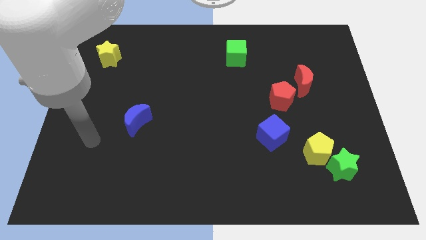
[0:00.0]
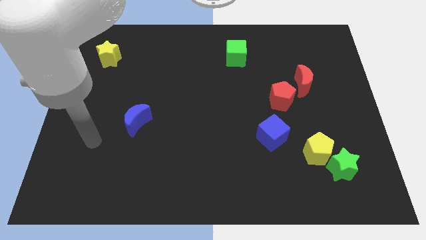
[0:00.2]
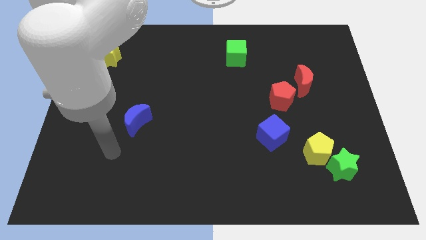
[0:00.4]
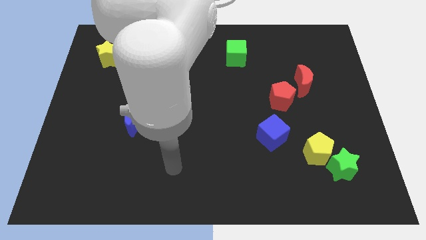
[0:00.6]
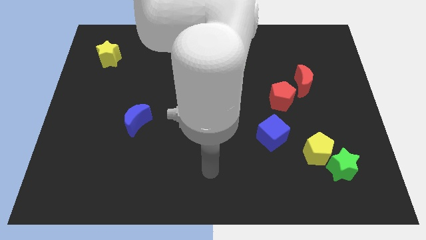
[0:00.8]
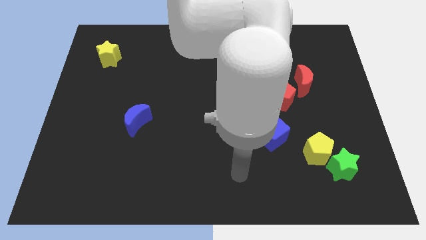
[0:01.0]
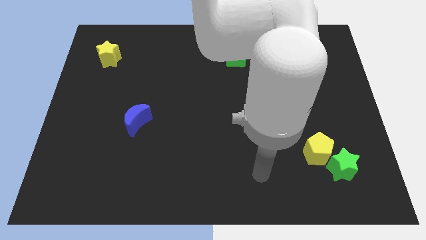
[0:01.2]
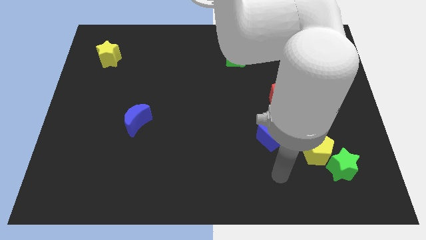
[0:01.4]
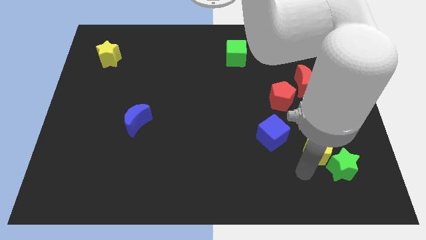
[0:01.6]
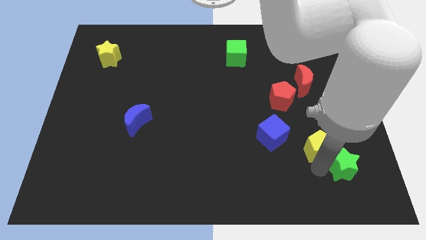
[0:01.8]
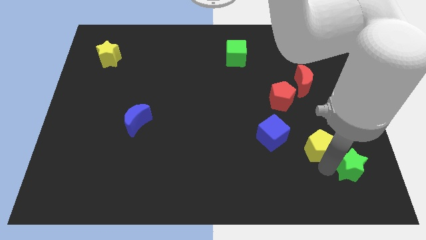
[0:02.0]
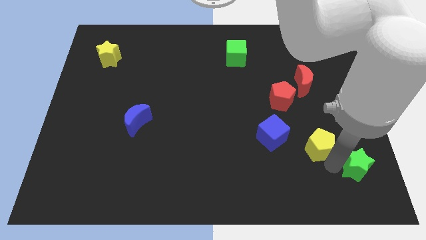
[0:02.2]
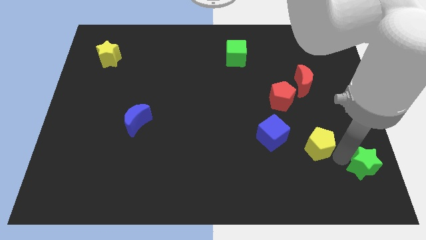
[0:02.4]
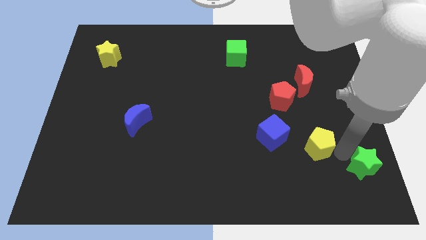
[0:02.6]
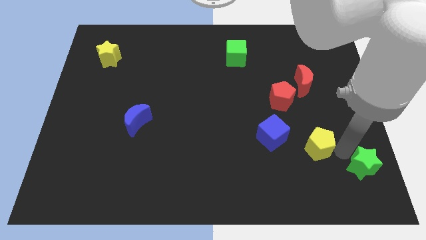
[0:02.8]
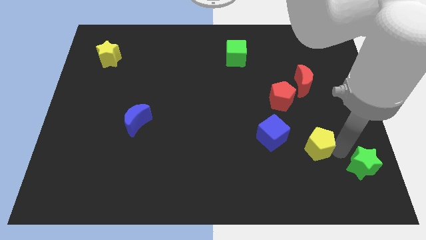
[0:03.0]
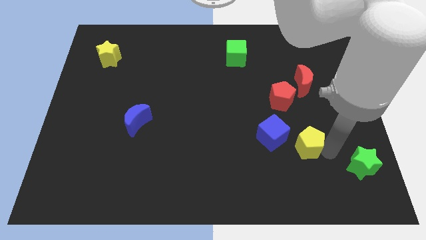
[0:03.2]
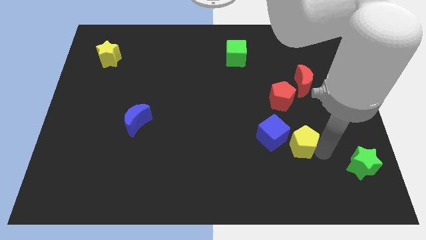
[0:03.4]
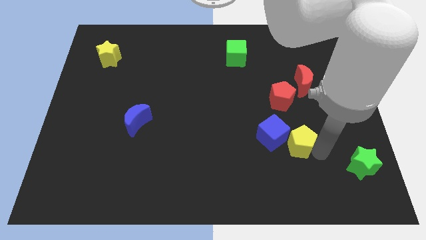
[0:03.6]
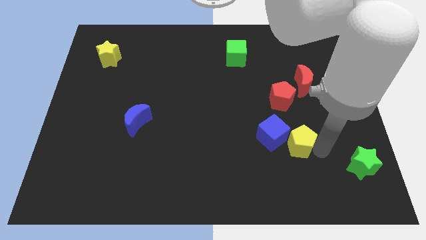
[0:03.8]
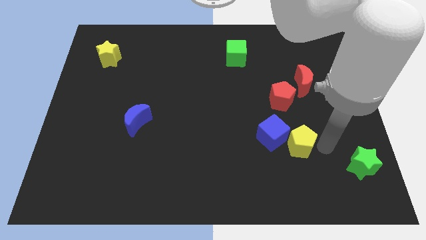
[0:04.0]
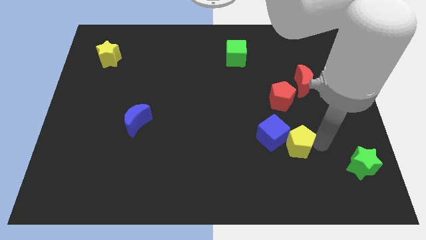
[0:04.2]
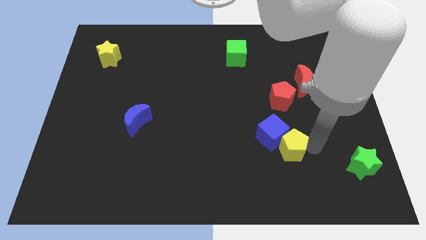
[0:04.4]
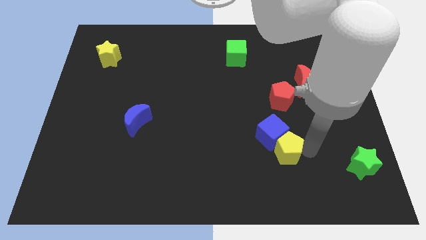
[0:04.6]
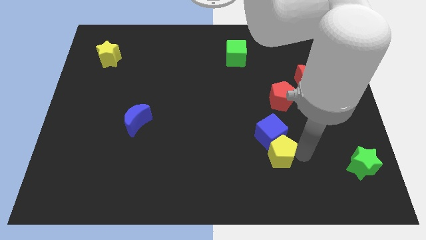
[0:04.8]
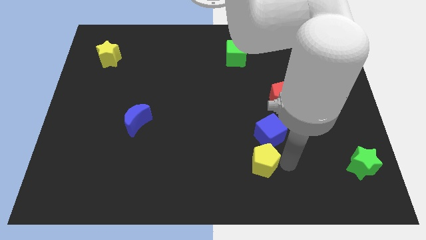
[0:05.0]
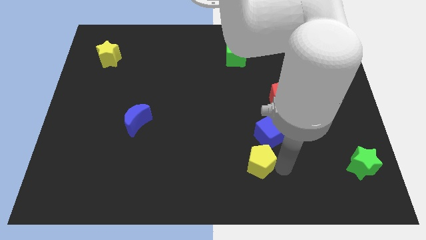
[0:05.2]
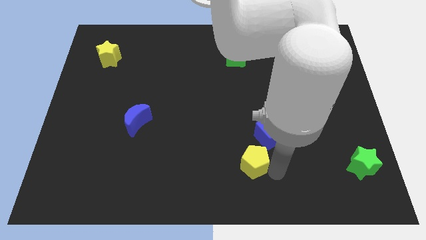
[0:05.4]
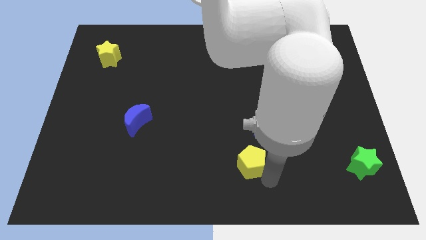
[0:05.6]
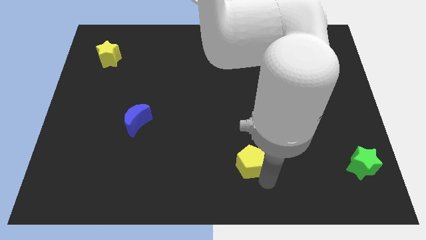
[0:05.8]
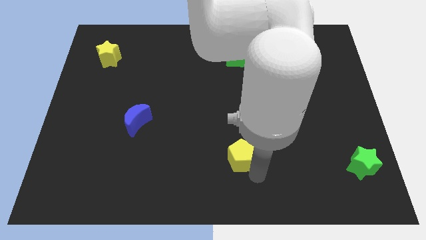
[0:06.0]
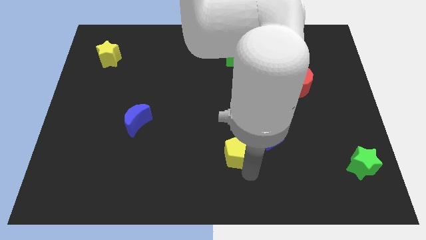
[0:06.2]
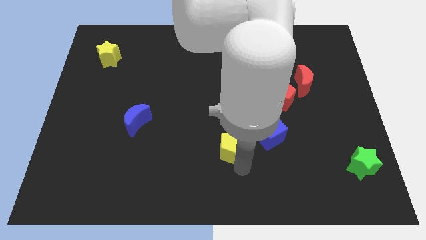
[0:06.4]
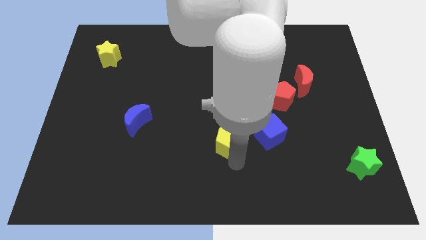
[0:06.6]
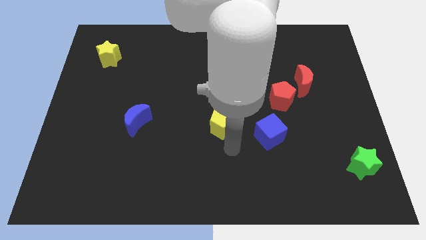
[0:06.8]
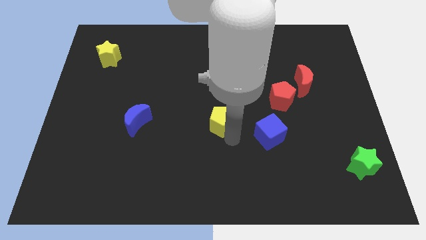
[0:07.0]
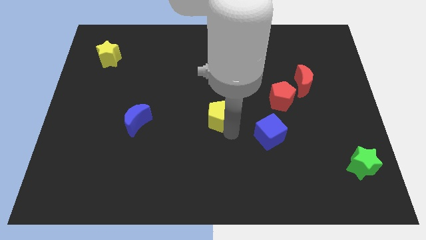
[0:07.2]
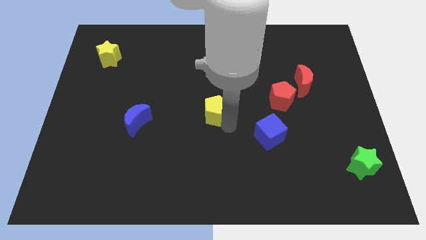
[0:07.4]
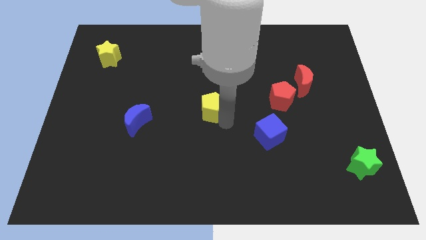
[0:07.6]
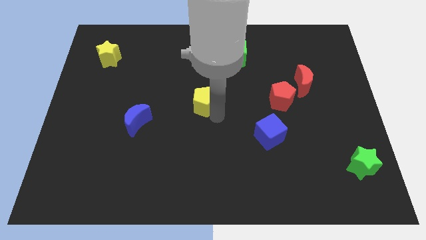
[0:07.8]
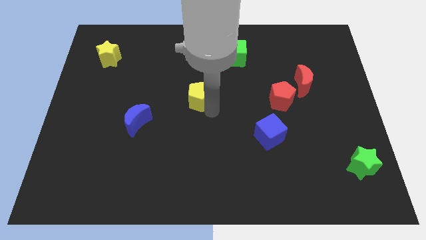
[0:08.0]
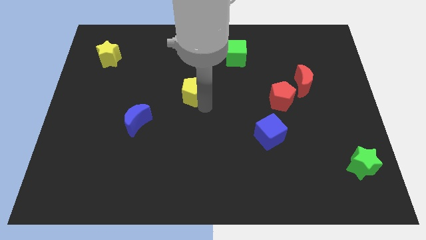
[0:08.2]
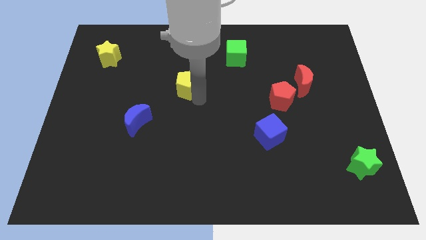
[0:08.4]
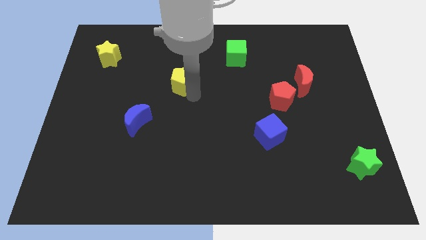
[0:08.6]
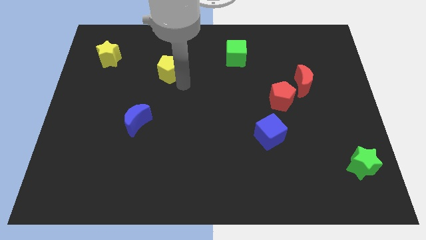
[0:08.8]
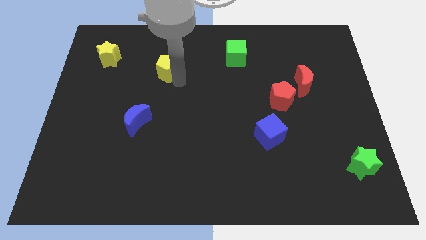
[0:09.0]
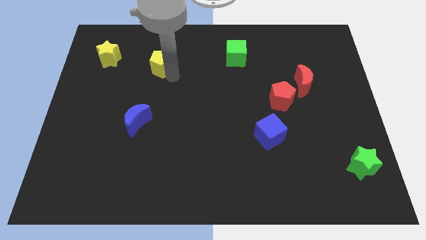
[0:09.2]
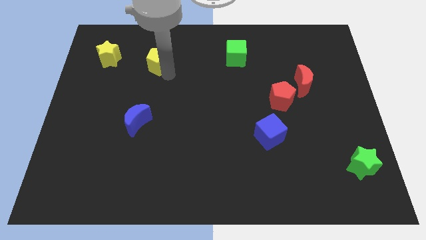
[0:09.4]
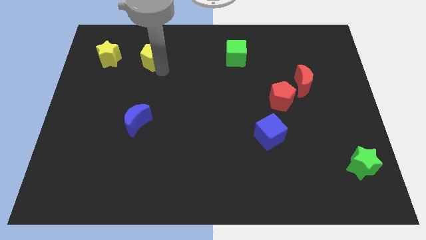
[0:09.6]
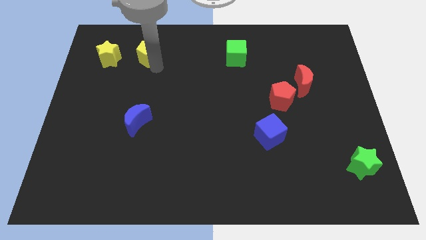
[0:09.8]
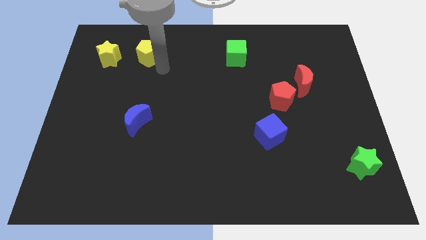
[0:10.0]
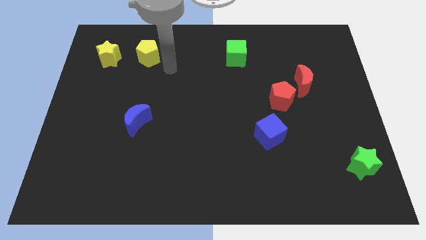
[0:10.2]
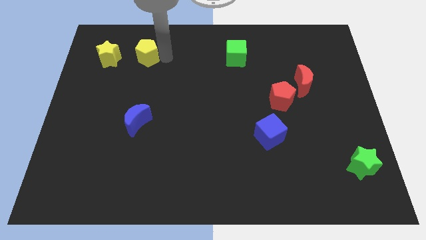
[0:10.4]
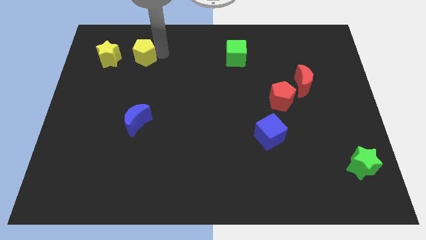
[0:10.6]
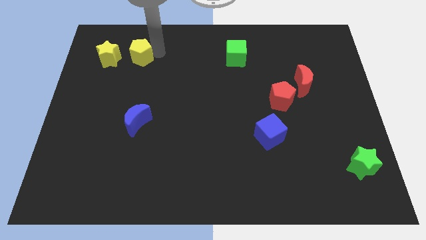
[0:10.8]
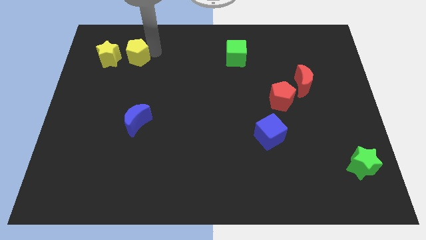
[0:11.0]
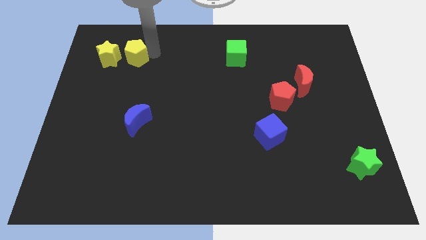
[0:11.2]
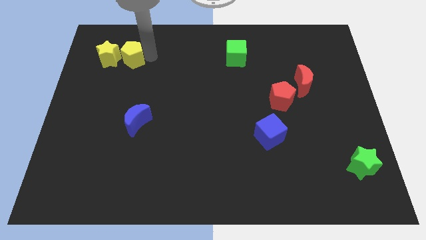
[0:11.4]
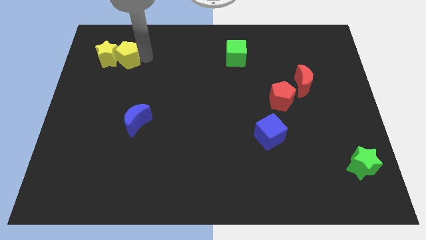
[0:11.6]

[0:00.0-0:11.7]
push the yellow pentagon close to the yellow star

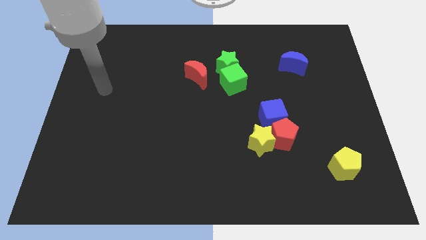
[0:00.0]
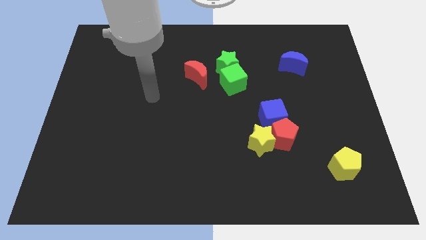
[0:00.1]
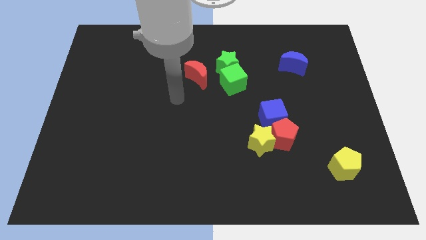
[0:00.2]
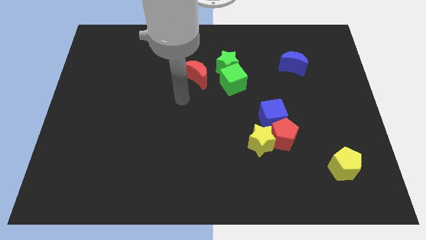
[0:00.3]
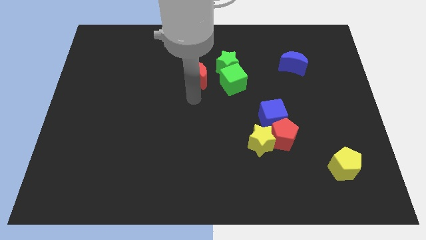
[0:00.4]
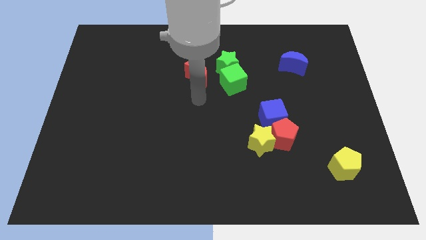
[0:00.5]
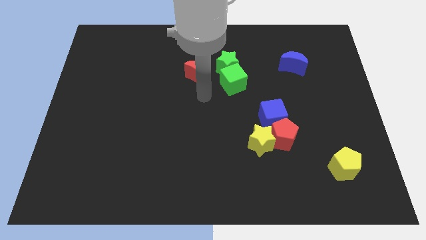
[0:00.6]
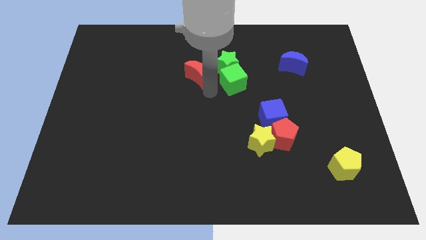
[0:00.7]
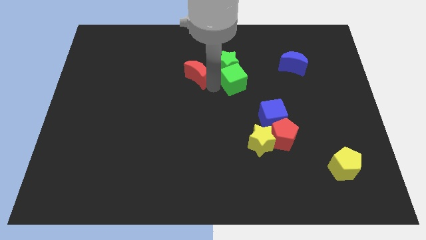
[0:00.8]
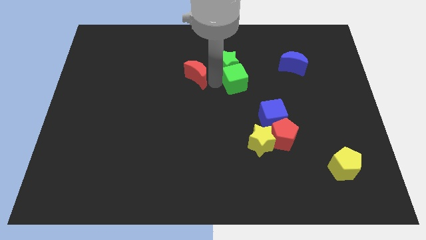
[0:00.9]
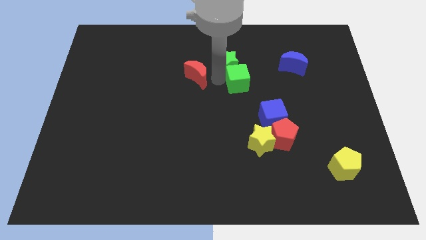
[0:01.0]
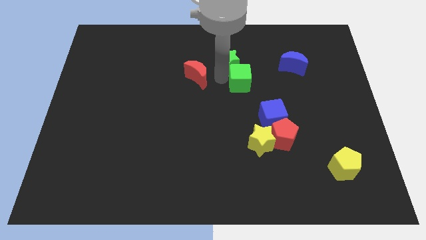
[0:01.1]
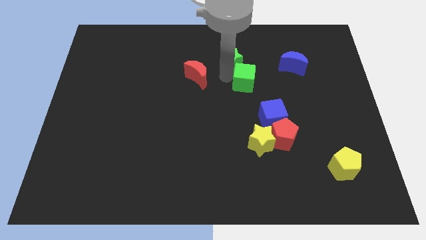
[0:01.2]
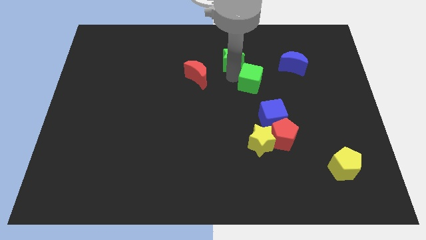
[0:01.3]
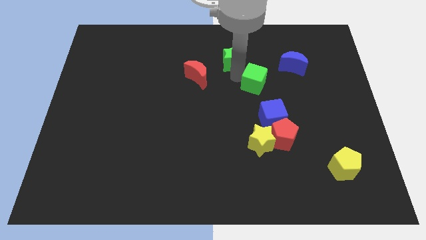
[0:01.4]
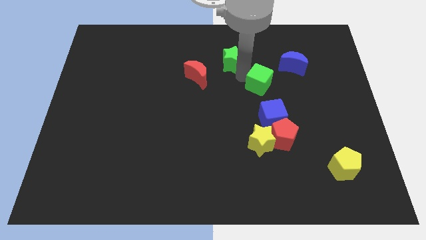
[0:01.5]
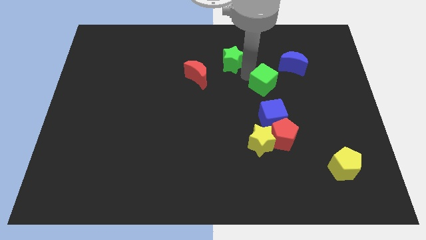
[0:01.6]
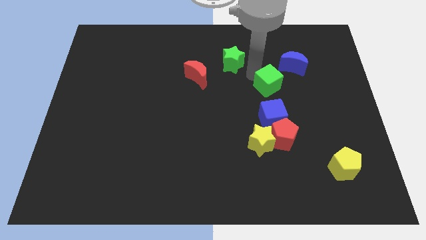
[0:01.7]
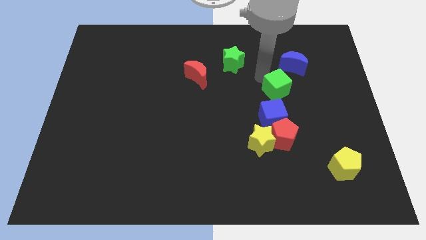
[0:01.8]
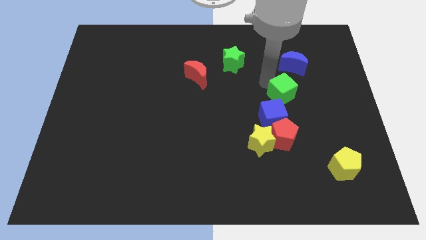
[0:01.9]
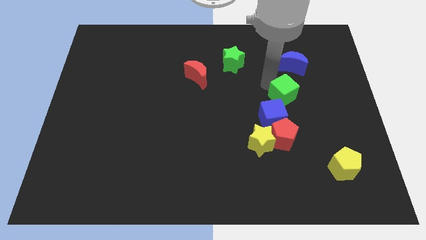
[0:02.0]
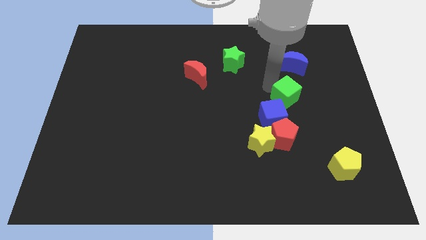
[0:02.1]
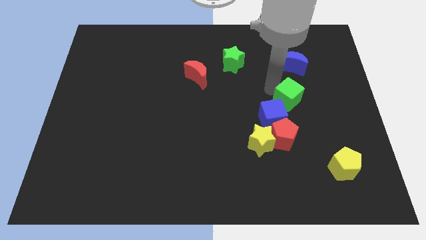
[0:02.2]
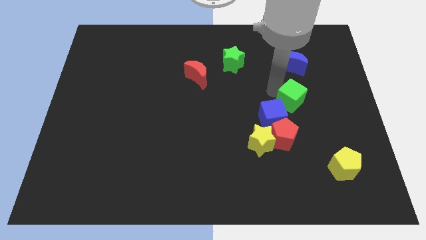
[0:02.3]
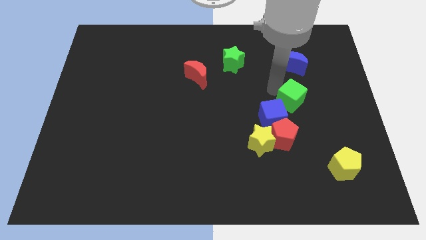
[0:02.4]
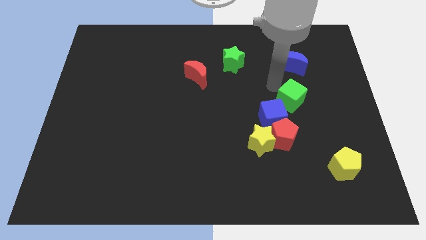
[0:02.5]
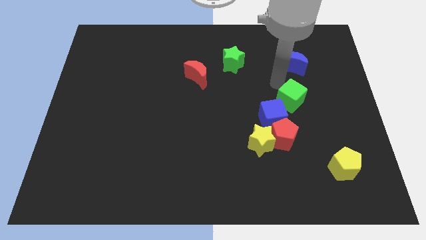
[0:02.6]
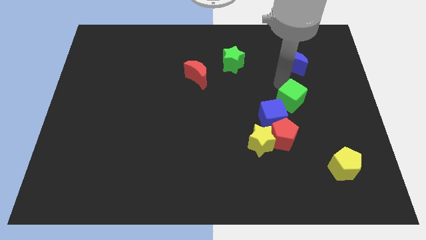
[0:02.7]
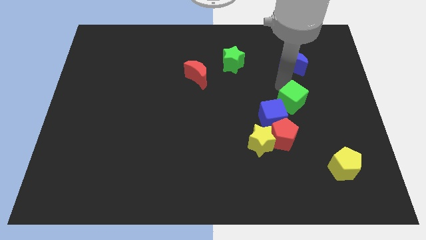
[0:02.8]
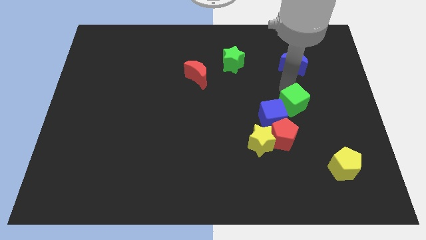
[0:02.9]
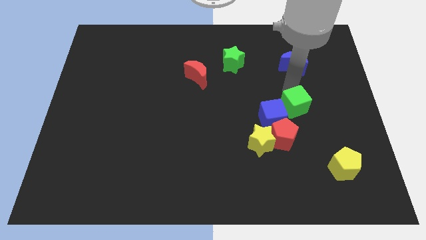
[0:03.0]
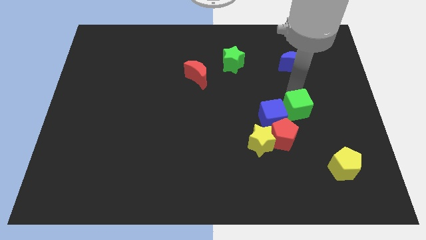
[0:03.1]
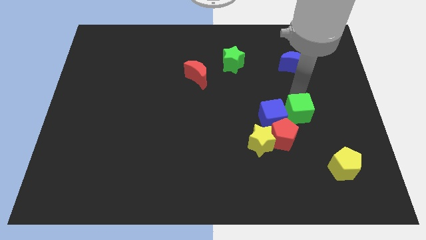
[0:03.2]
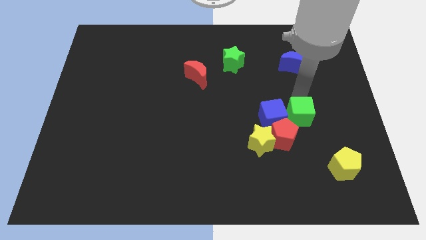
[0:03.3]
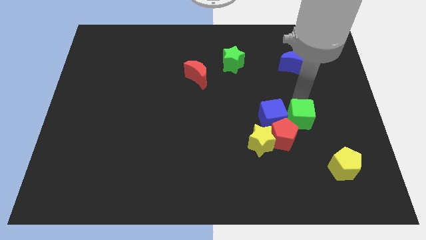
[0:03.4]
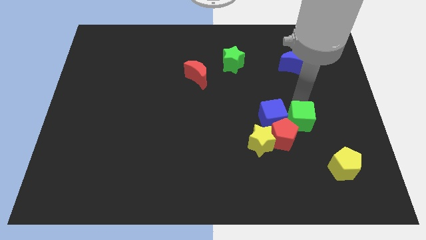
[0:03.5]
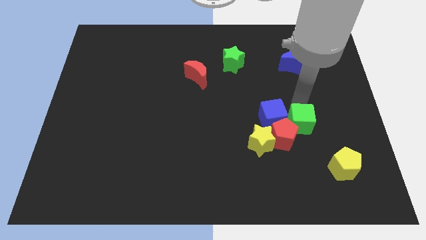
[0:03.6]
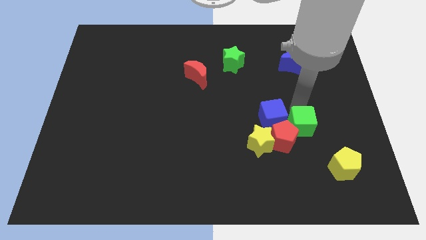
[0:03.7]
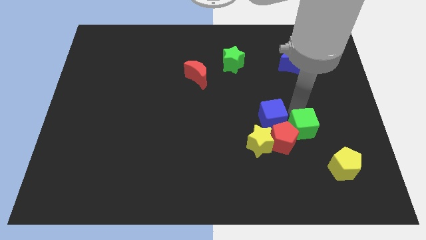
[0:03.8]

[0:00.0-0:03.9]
move the green cube to the red pentagon
